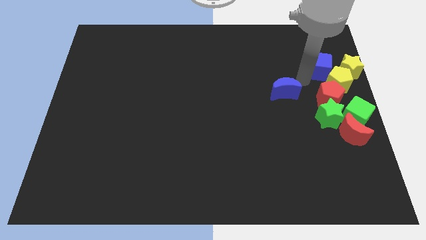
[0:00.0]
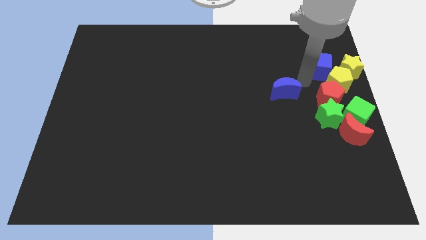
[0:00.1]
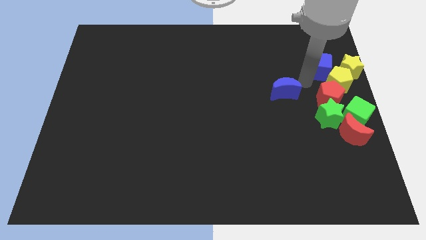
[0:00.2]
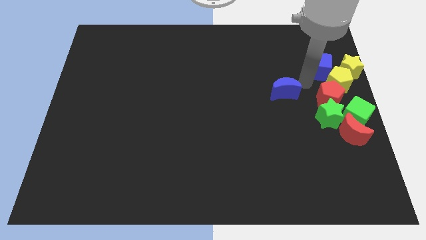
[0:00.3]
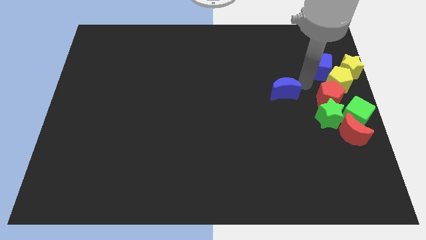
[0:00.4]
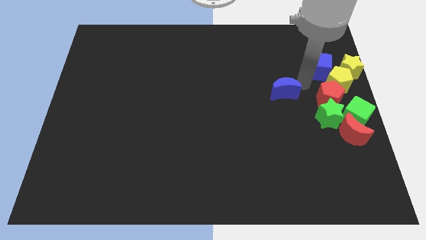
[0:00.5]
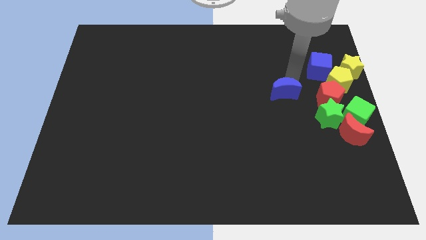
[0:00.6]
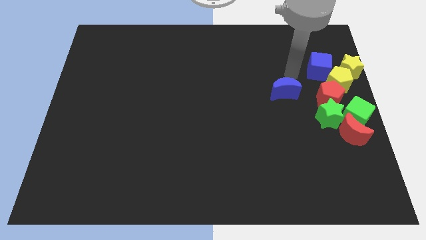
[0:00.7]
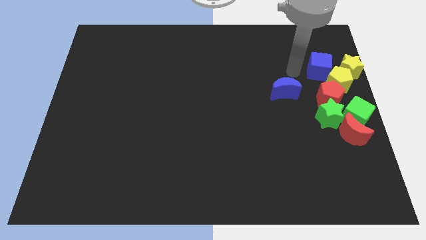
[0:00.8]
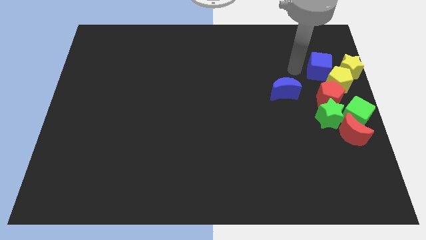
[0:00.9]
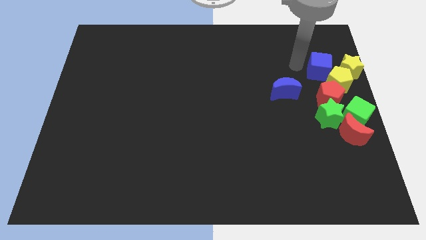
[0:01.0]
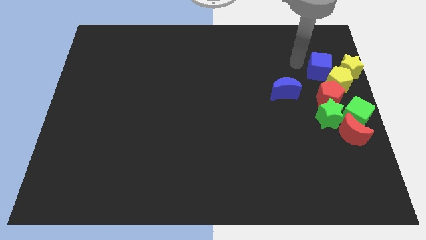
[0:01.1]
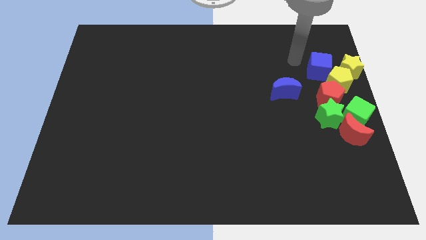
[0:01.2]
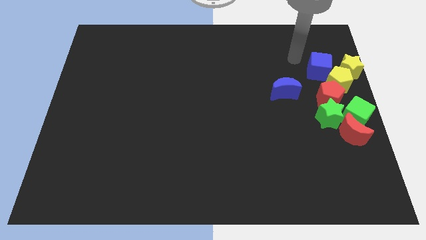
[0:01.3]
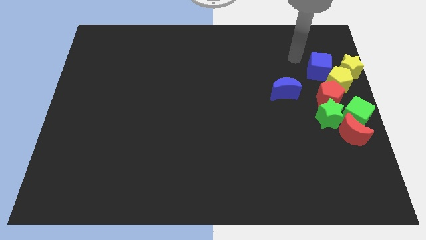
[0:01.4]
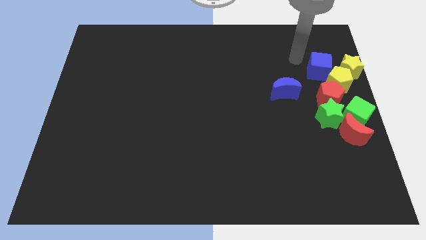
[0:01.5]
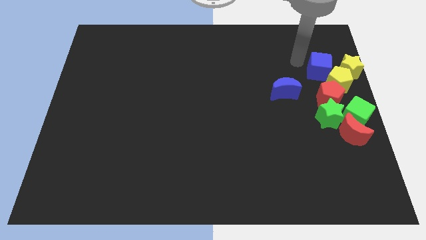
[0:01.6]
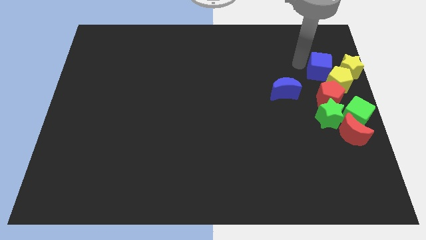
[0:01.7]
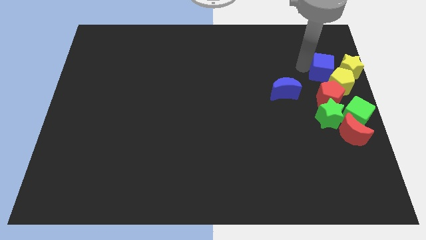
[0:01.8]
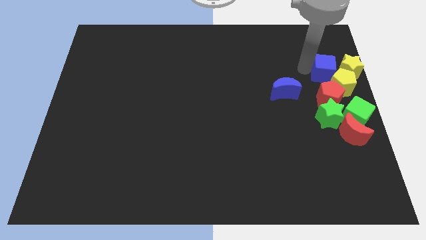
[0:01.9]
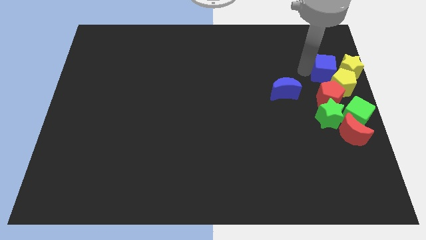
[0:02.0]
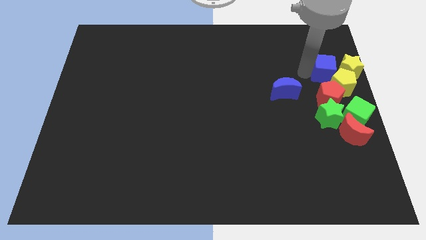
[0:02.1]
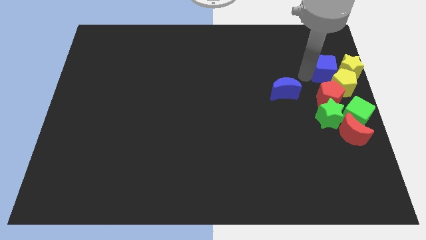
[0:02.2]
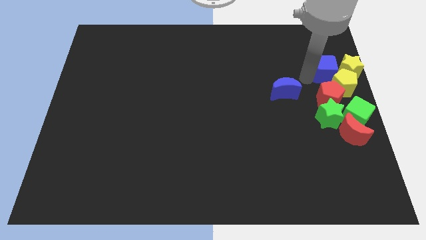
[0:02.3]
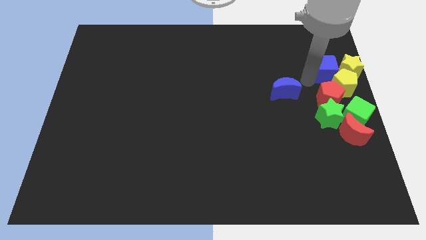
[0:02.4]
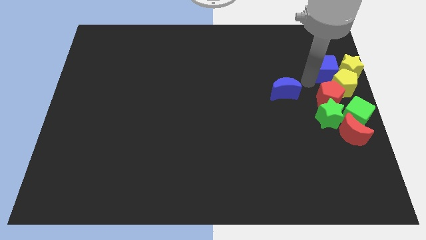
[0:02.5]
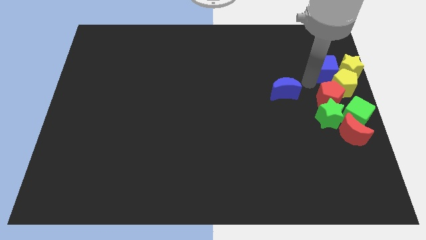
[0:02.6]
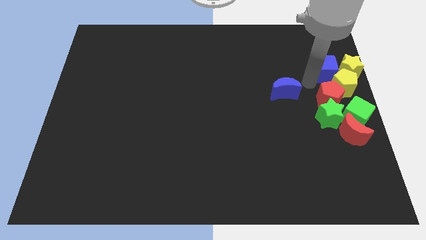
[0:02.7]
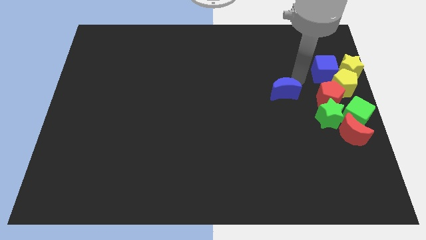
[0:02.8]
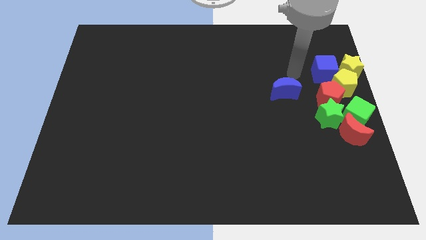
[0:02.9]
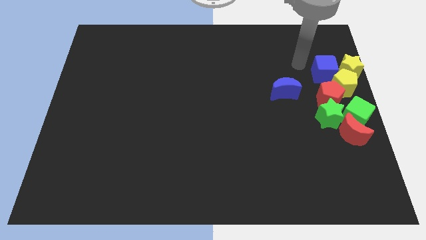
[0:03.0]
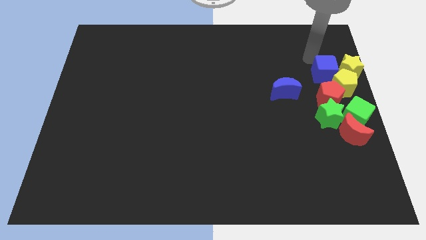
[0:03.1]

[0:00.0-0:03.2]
push the blue cube into the yellow pentagon

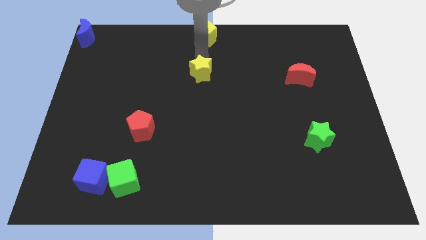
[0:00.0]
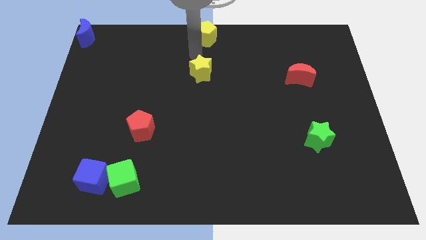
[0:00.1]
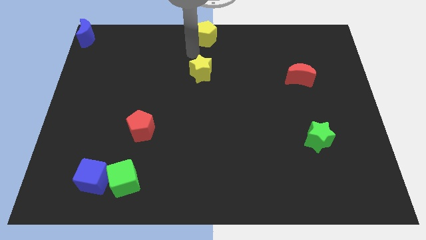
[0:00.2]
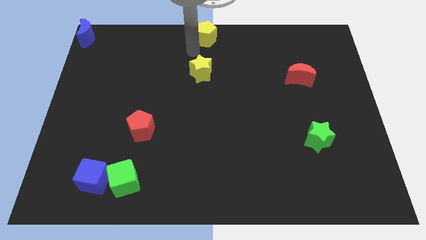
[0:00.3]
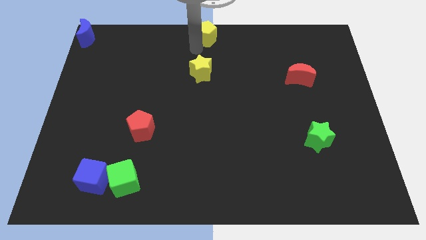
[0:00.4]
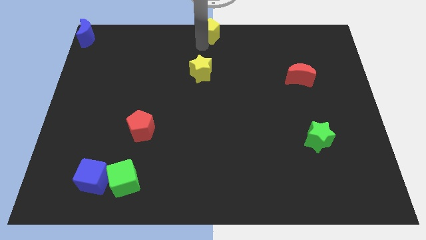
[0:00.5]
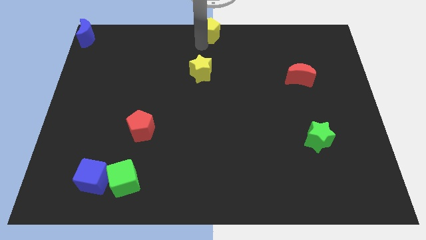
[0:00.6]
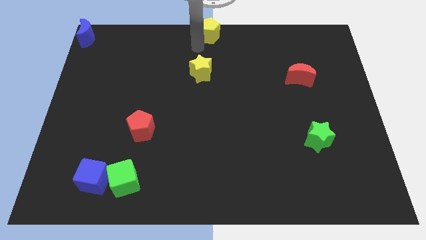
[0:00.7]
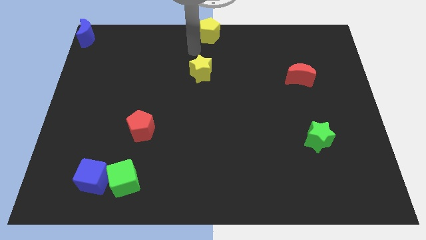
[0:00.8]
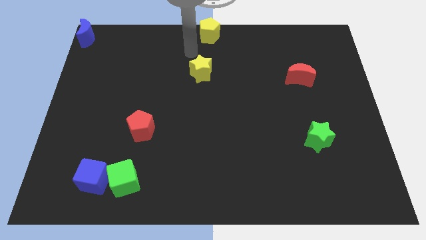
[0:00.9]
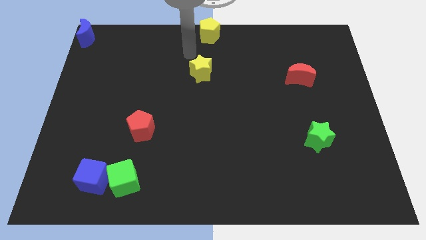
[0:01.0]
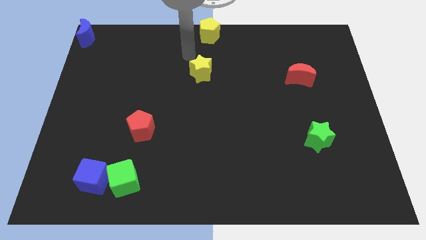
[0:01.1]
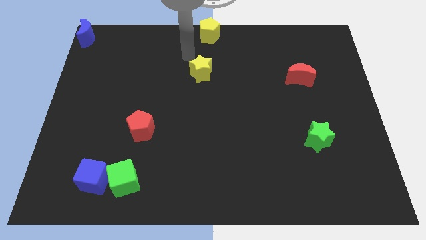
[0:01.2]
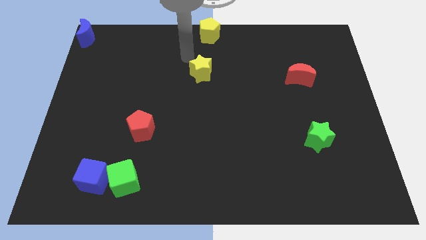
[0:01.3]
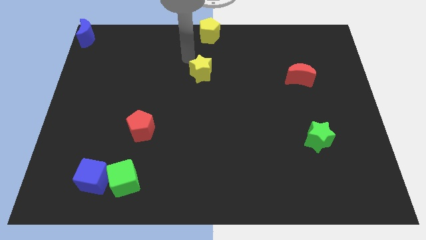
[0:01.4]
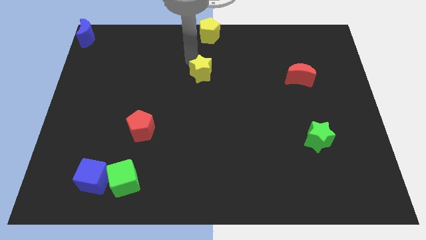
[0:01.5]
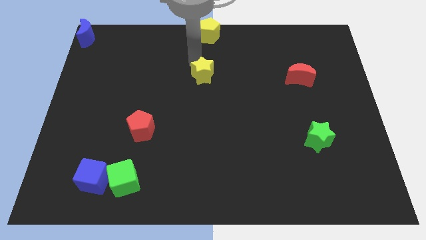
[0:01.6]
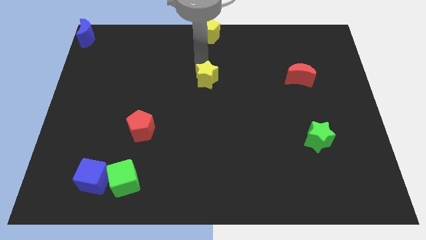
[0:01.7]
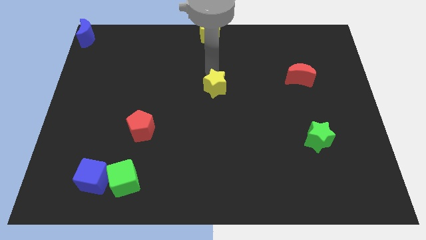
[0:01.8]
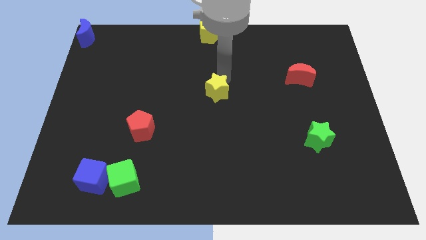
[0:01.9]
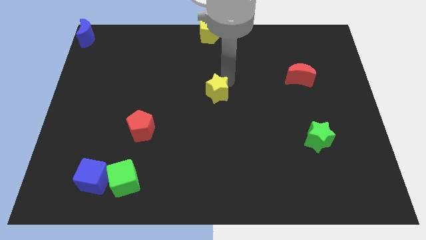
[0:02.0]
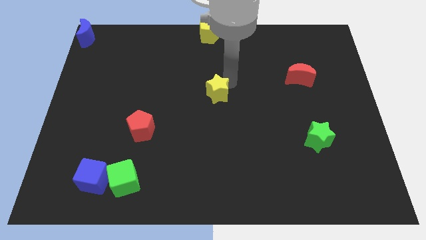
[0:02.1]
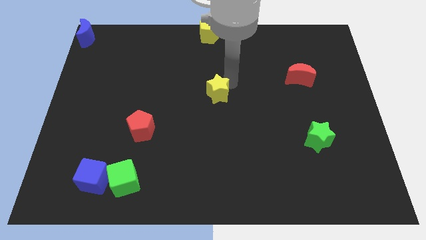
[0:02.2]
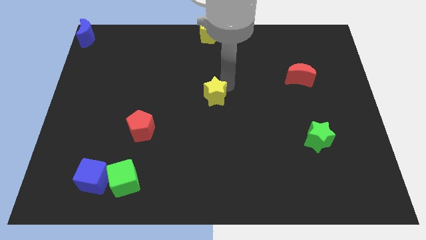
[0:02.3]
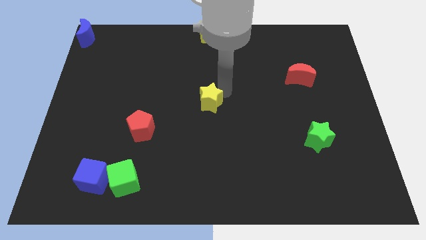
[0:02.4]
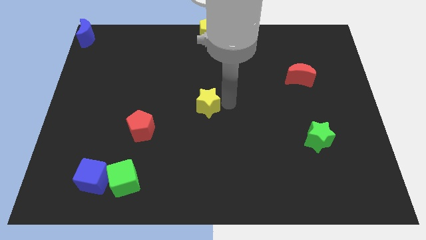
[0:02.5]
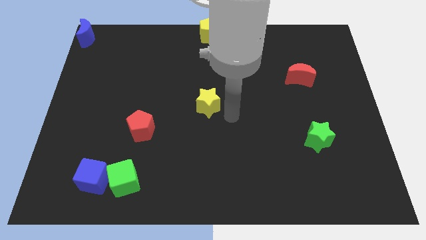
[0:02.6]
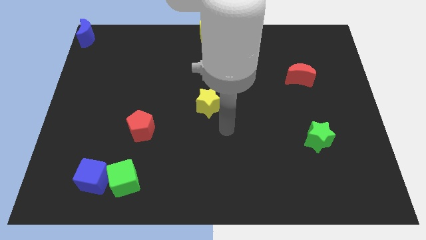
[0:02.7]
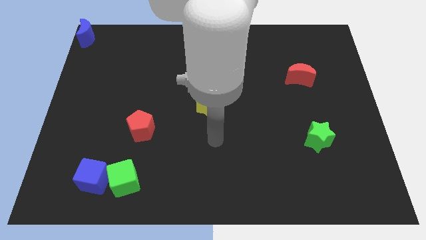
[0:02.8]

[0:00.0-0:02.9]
move the yellow star towards the center of the board

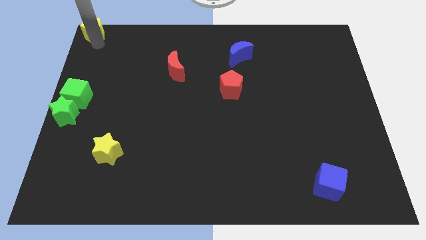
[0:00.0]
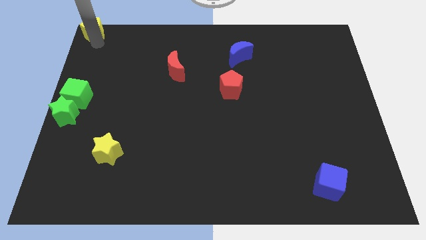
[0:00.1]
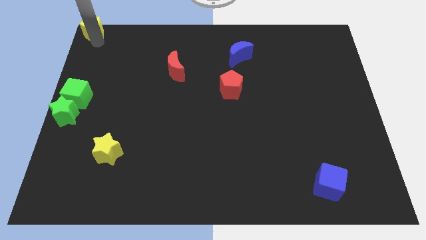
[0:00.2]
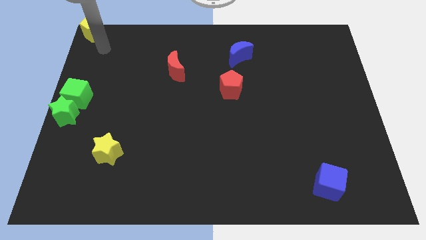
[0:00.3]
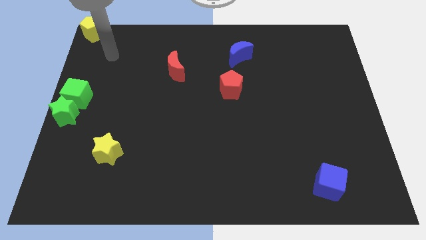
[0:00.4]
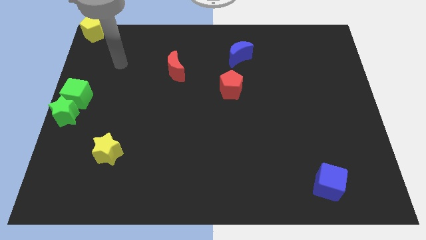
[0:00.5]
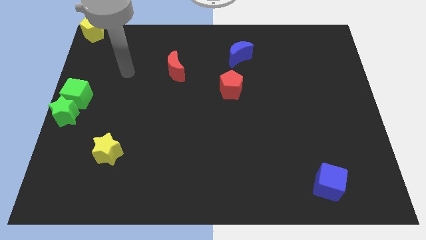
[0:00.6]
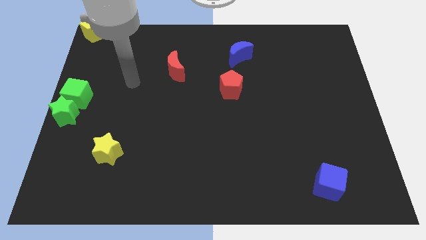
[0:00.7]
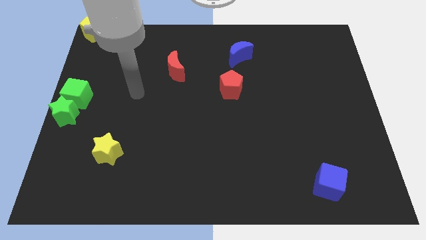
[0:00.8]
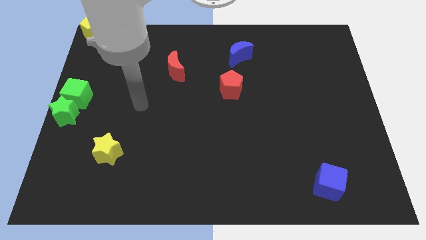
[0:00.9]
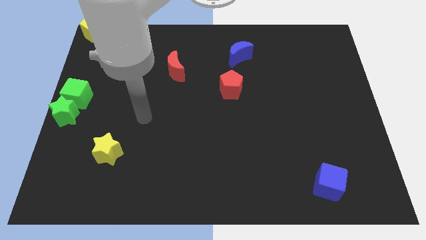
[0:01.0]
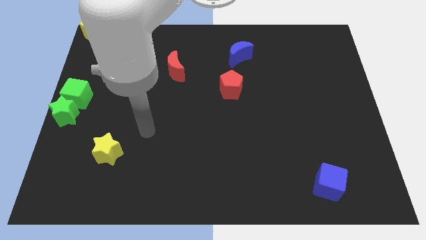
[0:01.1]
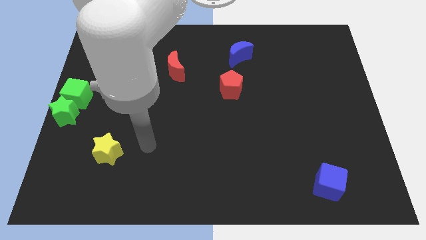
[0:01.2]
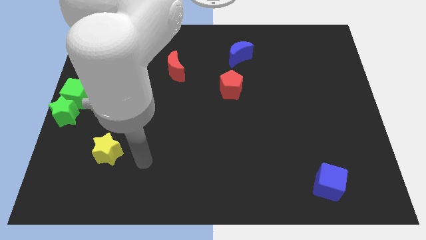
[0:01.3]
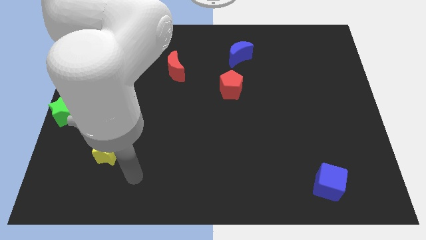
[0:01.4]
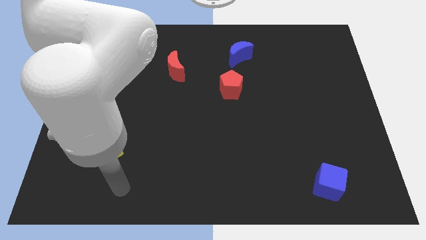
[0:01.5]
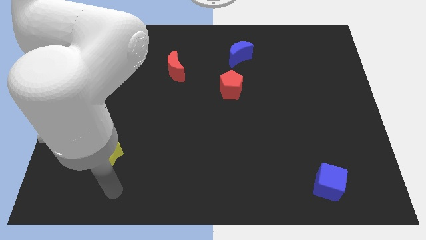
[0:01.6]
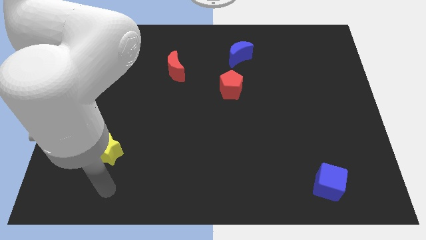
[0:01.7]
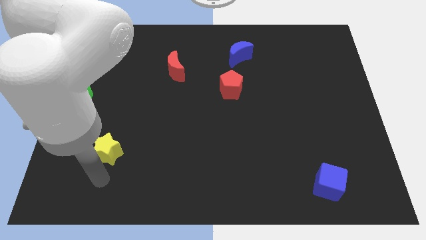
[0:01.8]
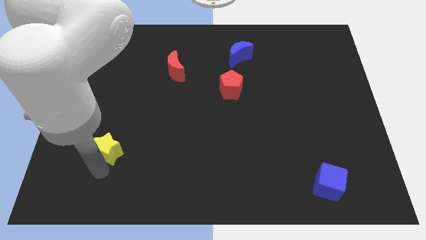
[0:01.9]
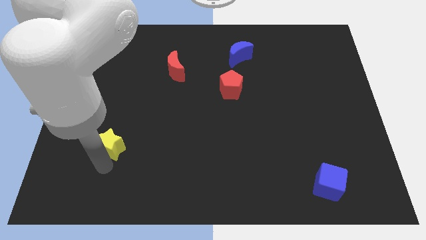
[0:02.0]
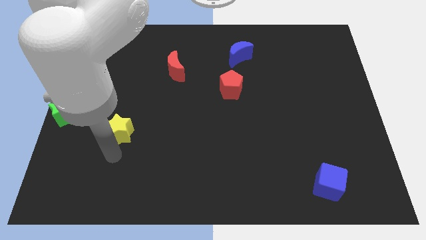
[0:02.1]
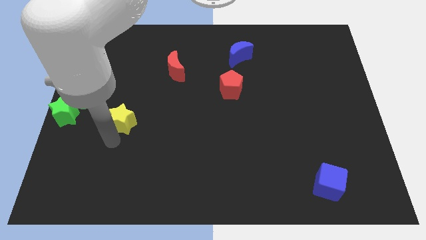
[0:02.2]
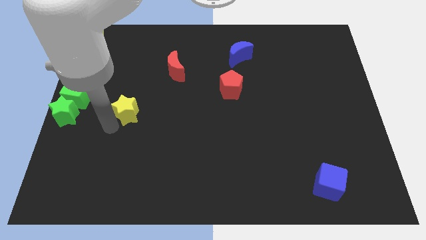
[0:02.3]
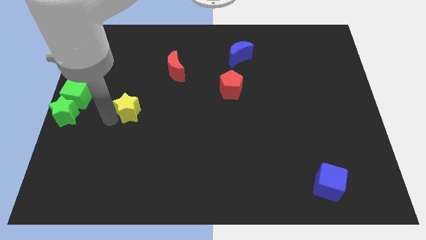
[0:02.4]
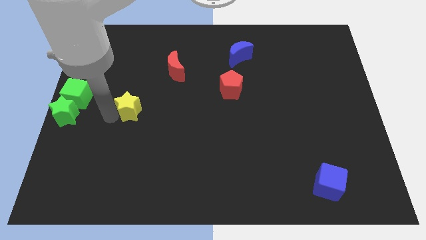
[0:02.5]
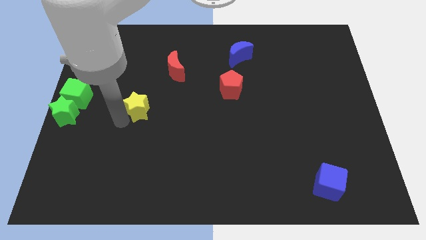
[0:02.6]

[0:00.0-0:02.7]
place the yellow star right to the green blocks
